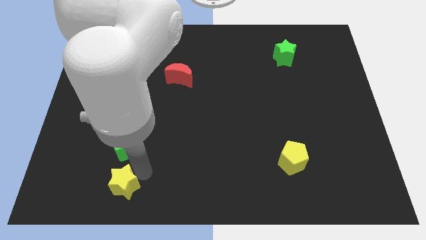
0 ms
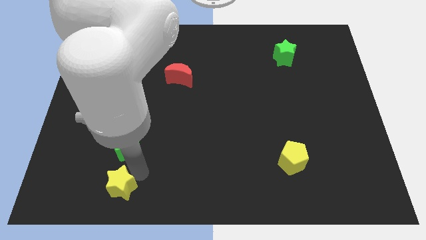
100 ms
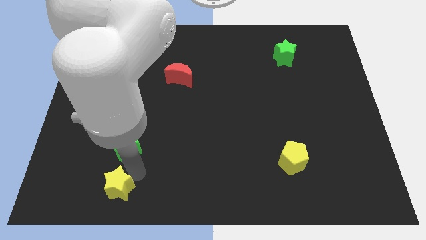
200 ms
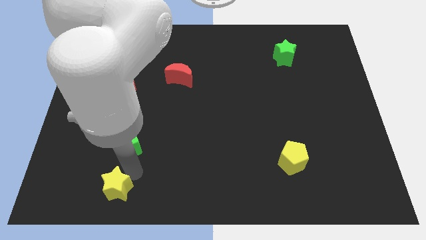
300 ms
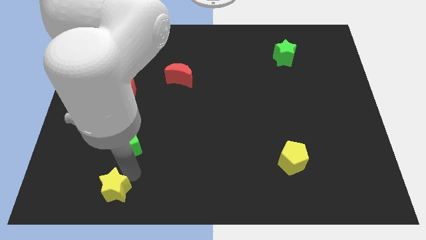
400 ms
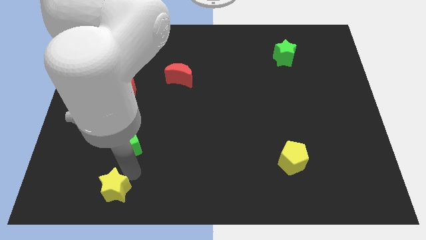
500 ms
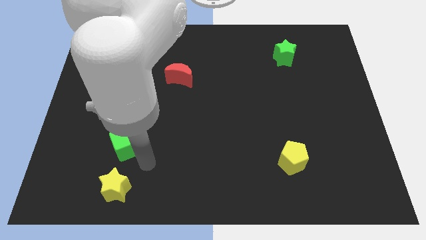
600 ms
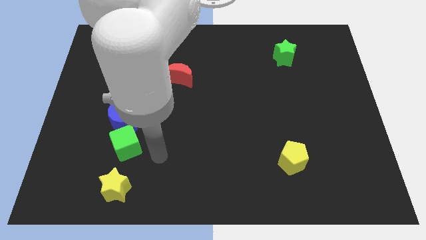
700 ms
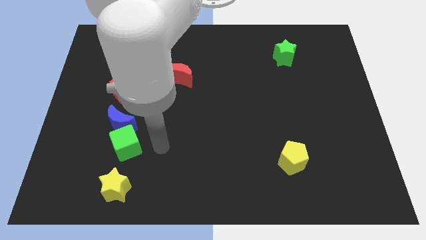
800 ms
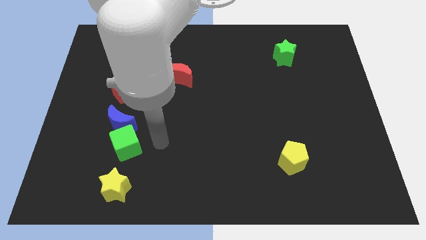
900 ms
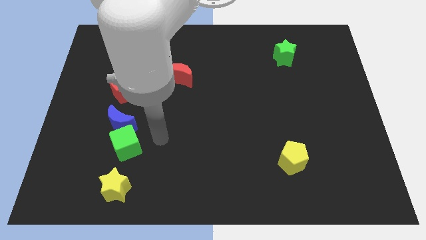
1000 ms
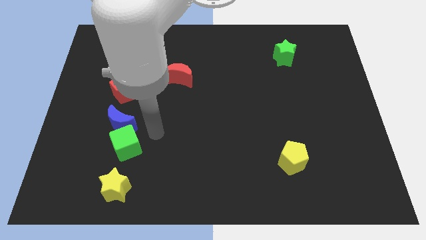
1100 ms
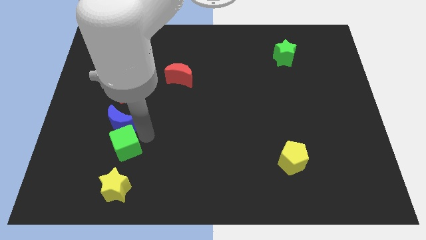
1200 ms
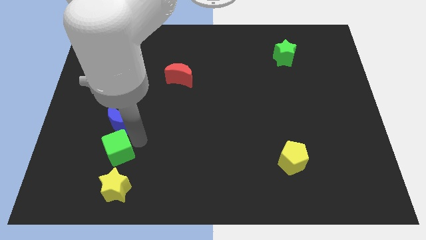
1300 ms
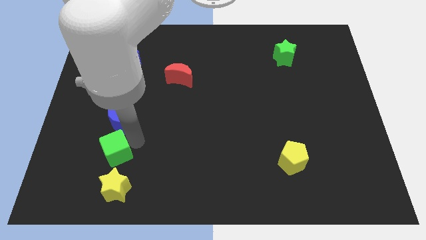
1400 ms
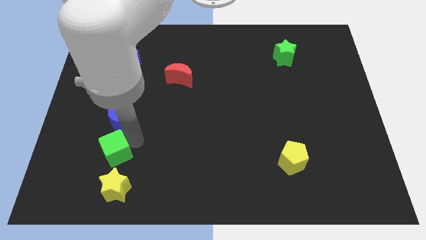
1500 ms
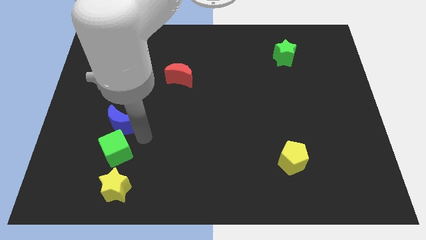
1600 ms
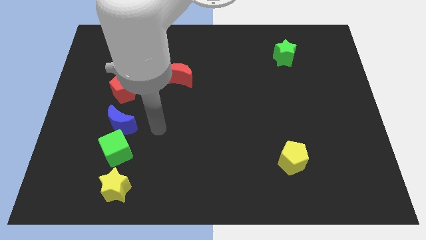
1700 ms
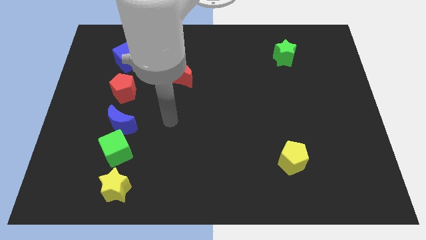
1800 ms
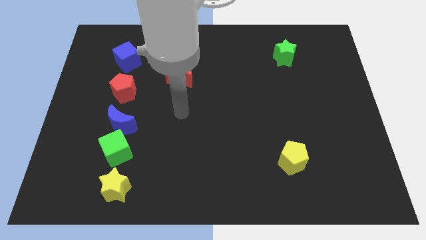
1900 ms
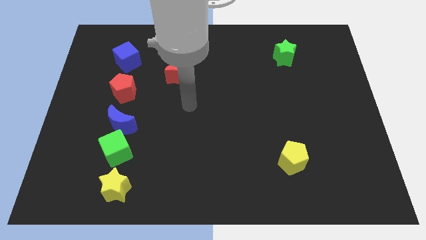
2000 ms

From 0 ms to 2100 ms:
place the arm below the red crescent

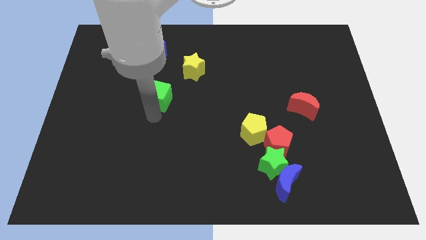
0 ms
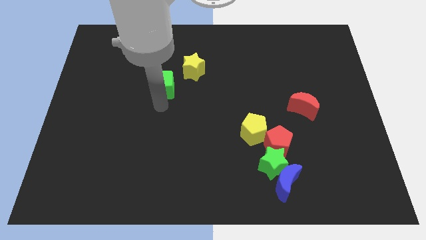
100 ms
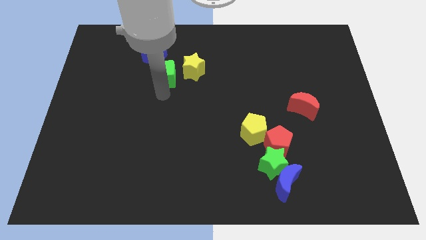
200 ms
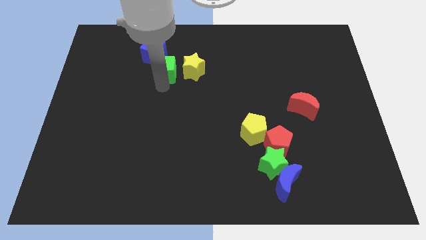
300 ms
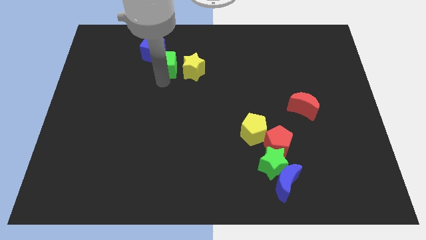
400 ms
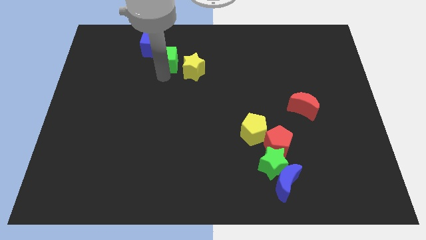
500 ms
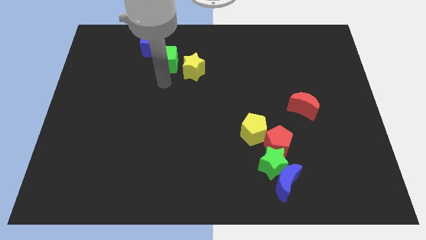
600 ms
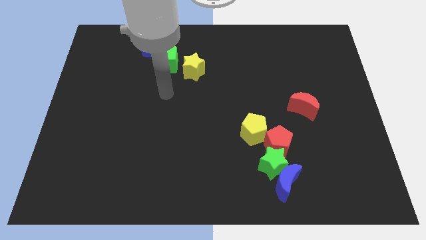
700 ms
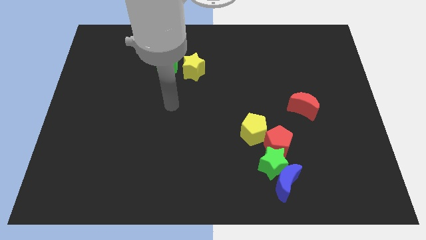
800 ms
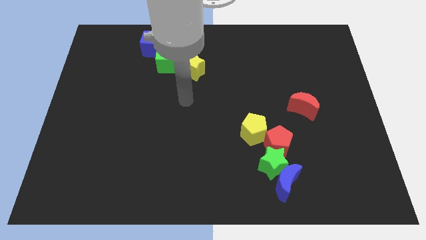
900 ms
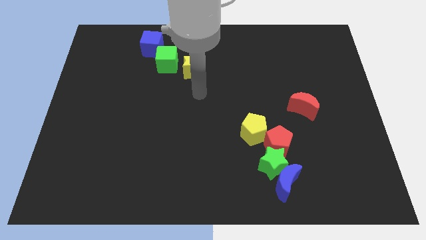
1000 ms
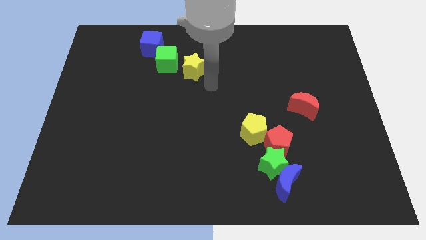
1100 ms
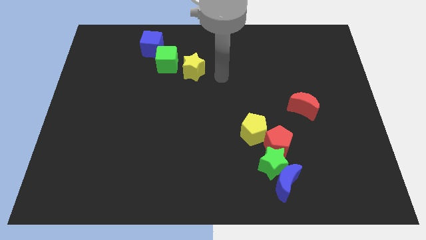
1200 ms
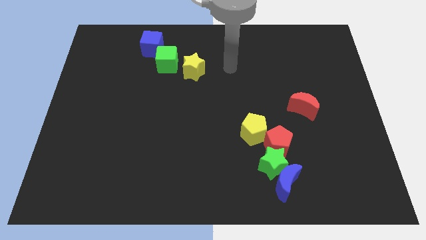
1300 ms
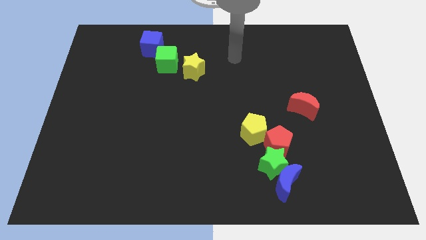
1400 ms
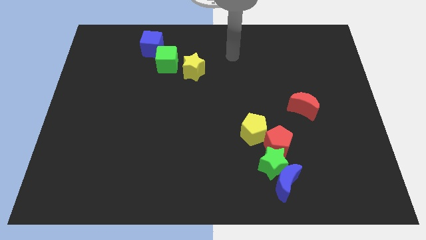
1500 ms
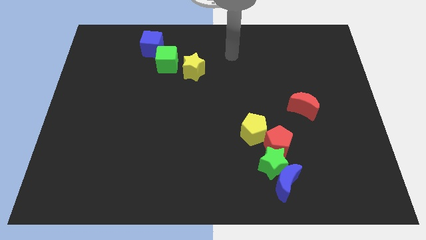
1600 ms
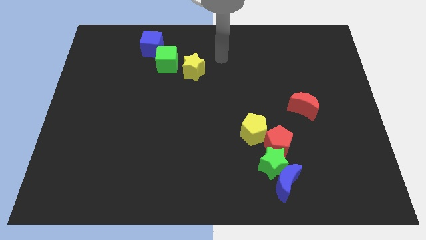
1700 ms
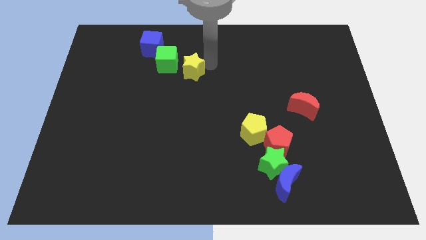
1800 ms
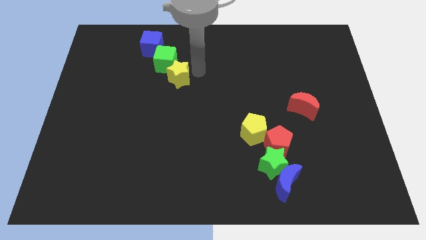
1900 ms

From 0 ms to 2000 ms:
push the green cube to the diagonal down right side of blue cube

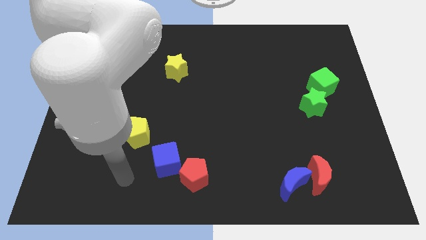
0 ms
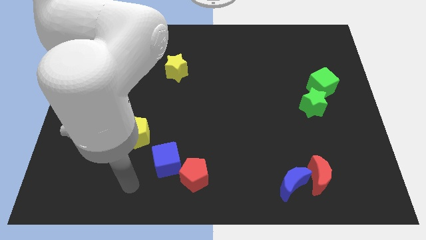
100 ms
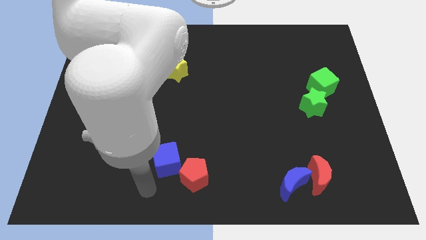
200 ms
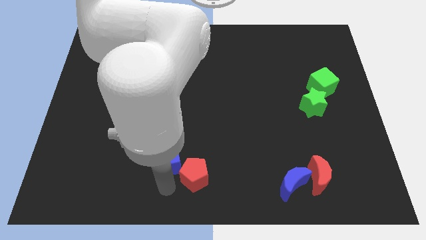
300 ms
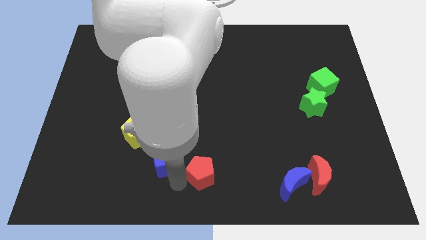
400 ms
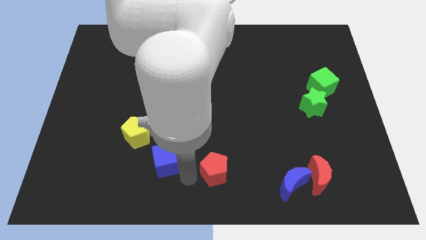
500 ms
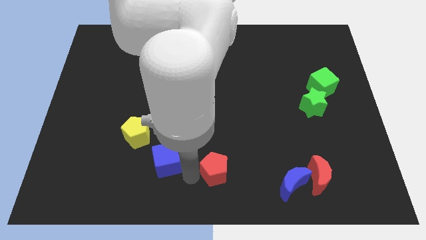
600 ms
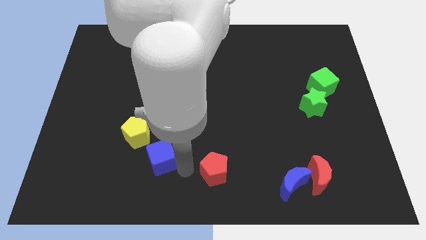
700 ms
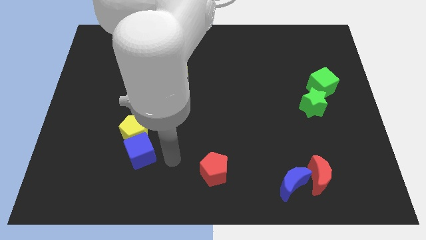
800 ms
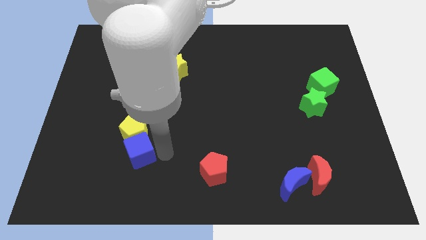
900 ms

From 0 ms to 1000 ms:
separate the red pentagon and the blue cube

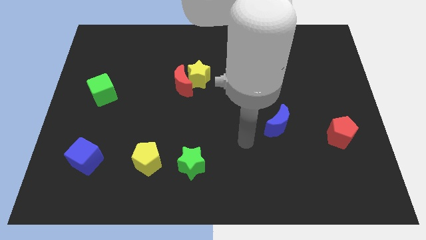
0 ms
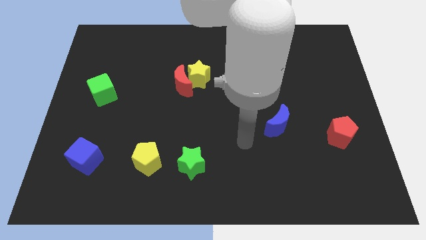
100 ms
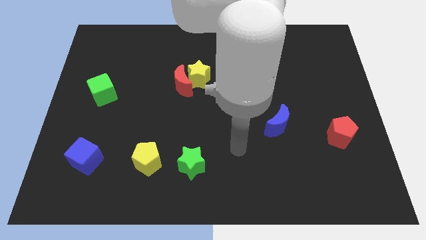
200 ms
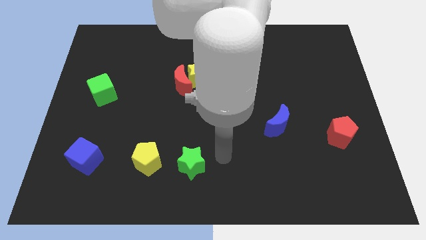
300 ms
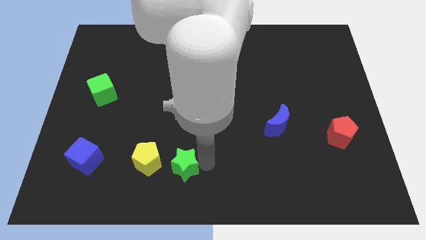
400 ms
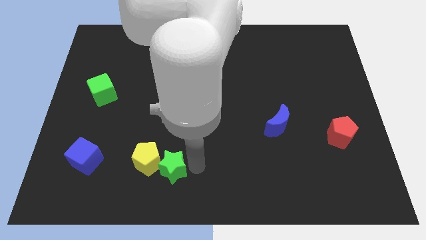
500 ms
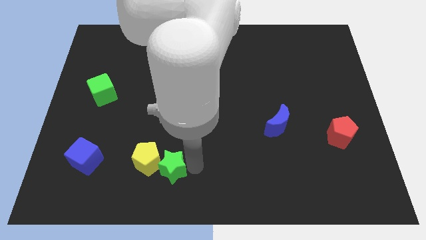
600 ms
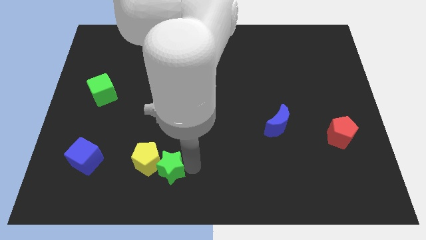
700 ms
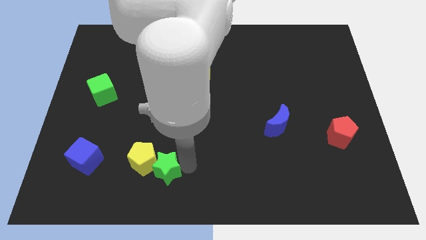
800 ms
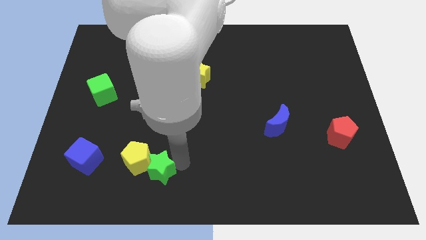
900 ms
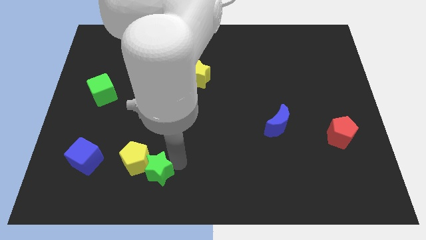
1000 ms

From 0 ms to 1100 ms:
push the yellow pentagon with the green star

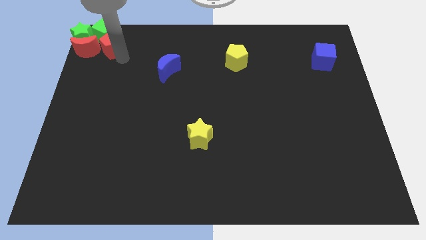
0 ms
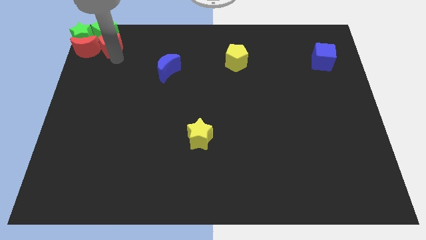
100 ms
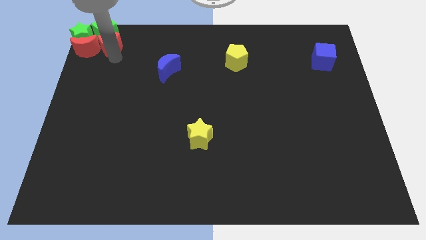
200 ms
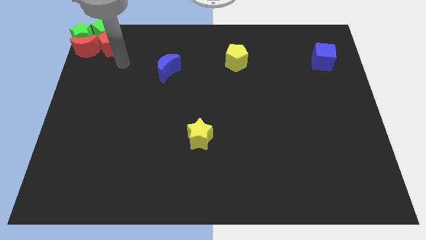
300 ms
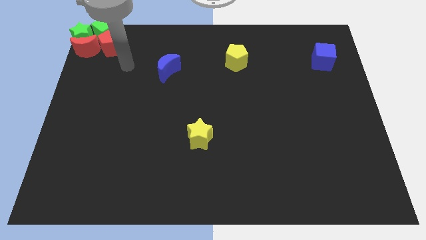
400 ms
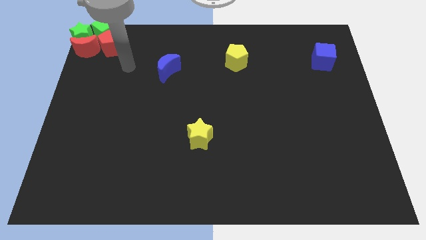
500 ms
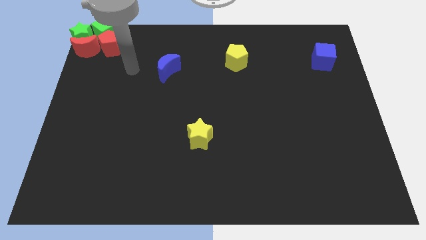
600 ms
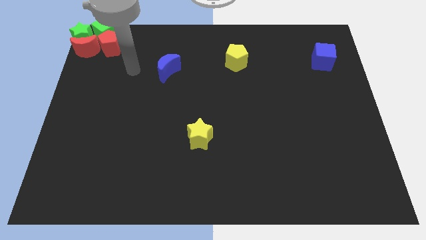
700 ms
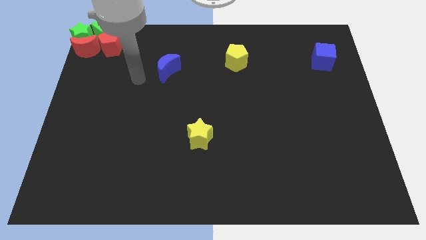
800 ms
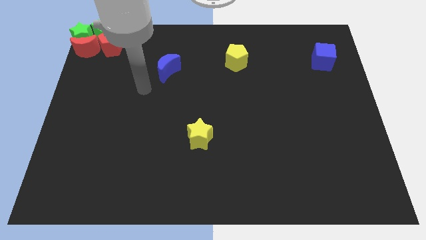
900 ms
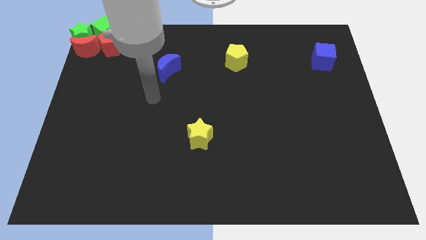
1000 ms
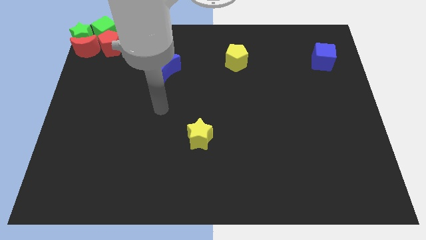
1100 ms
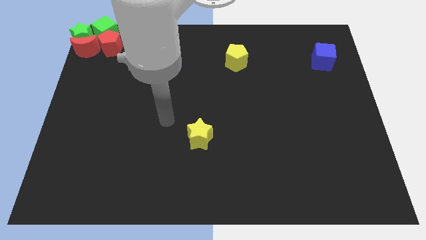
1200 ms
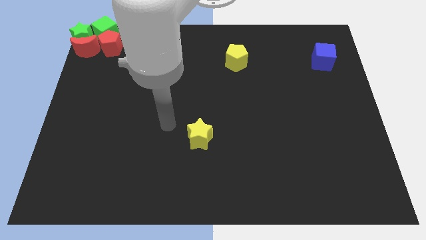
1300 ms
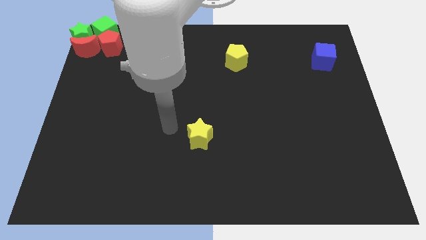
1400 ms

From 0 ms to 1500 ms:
place the arm away from the red pentagon

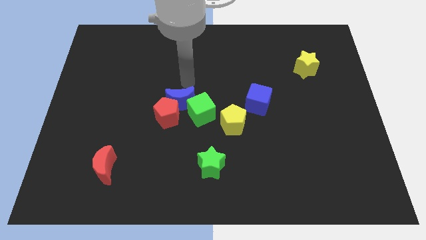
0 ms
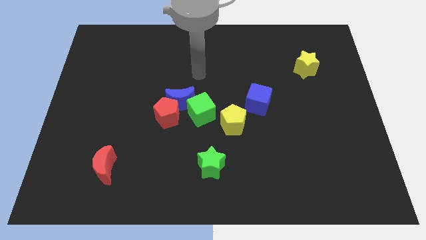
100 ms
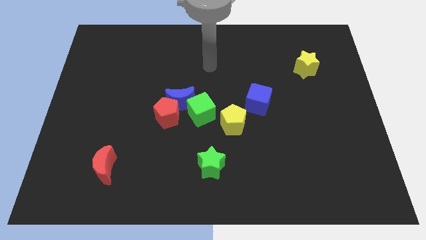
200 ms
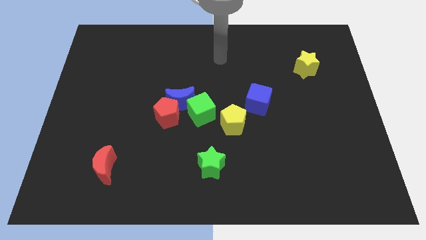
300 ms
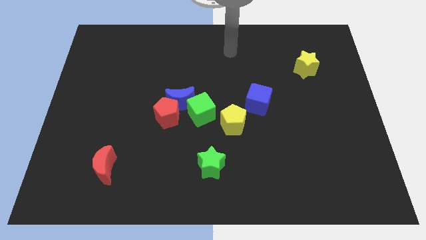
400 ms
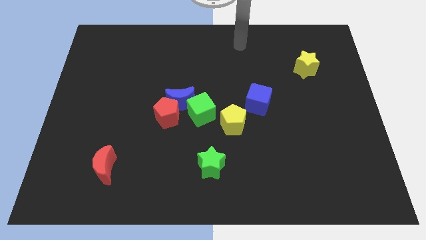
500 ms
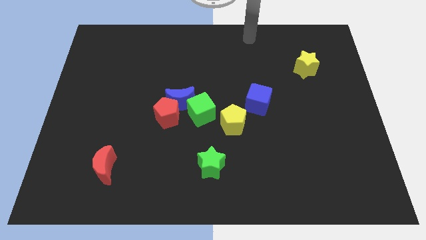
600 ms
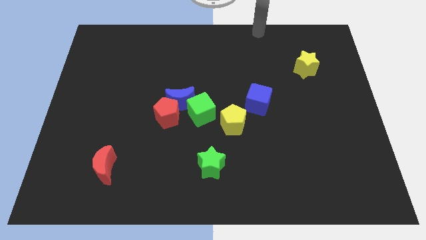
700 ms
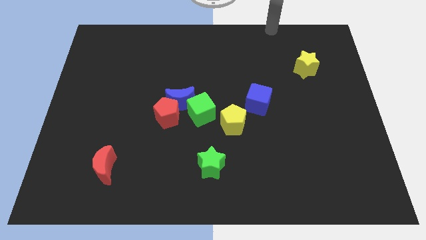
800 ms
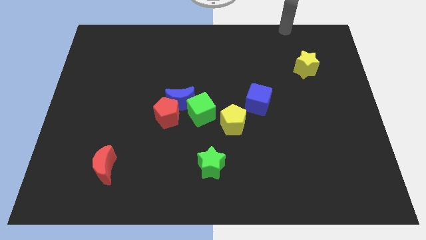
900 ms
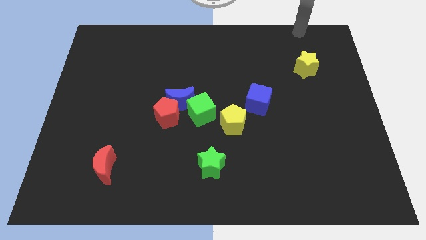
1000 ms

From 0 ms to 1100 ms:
move the arm away from the blue crescent

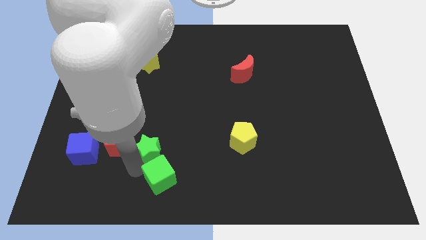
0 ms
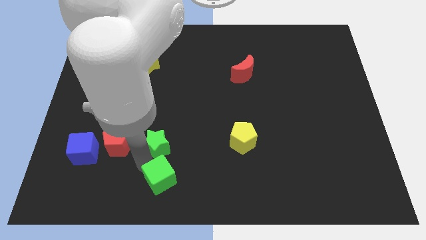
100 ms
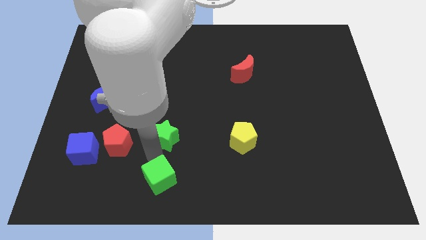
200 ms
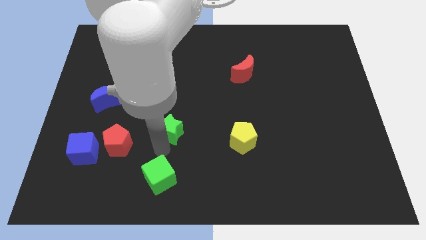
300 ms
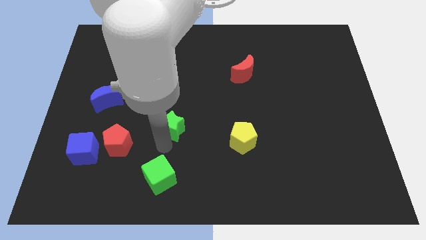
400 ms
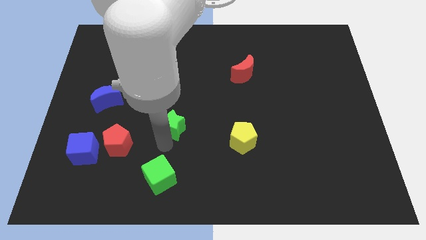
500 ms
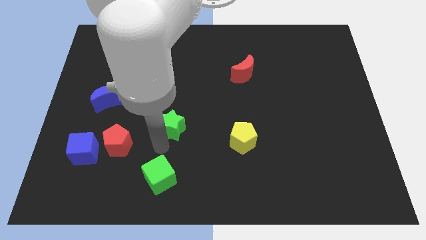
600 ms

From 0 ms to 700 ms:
move the green star slightly upward from the red pentagon
